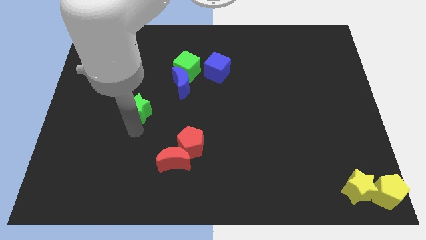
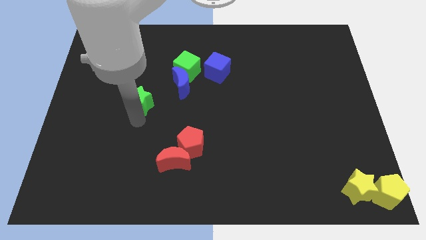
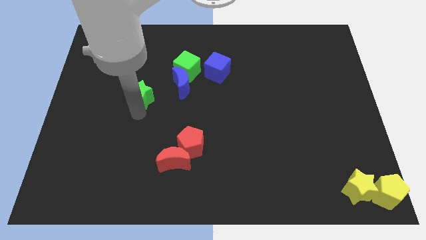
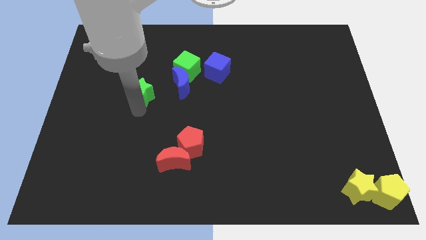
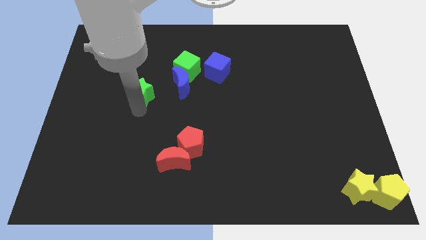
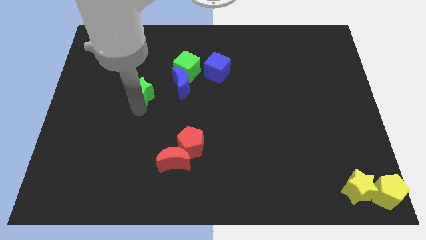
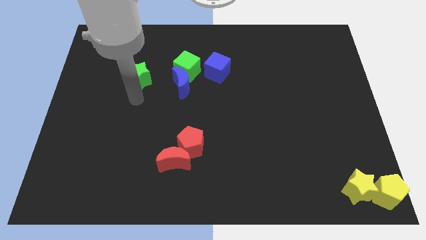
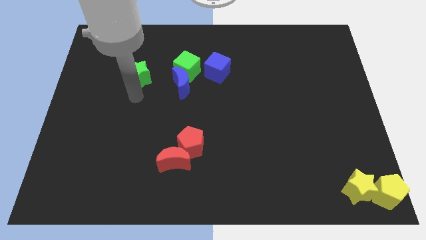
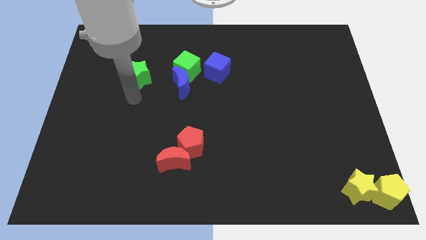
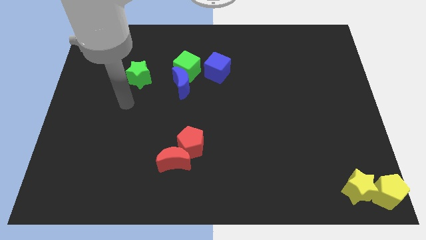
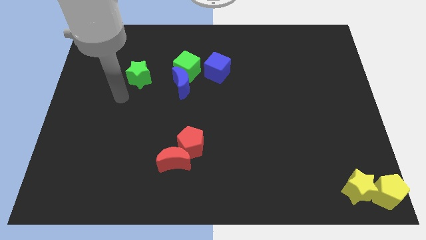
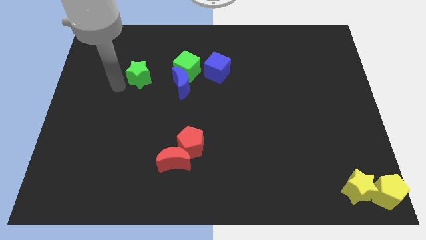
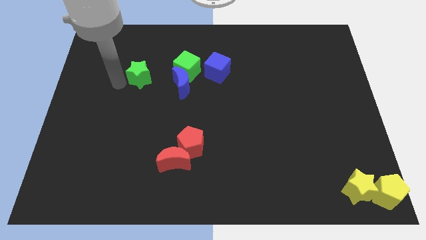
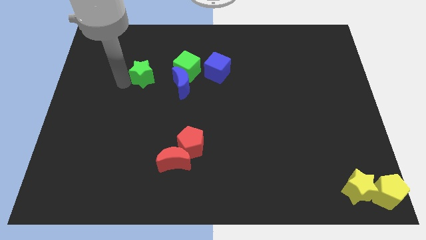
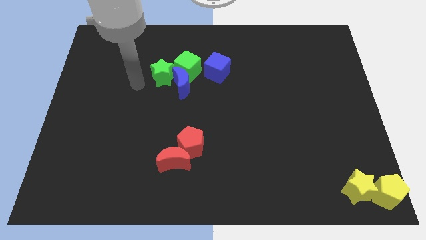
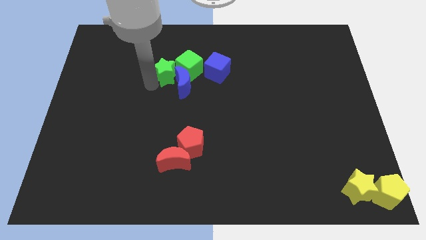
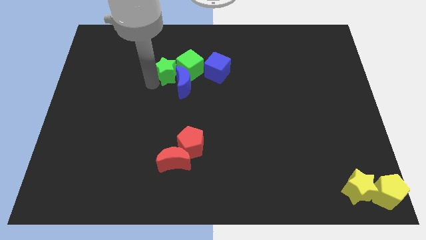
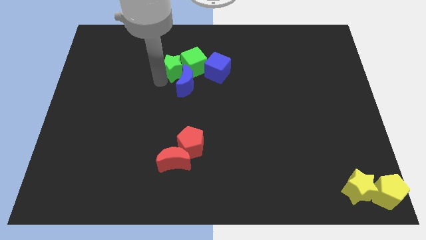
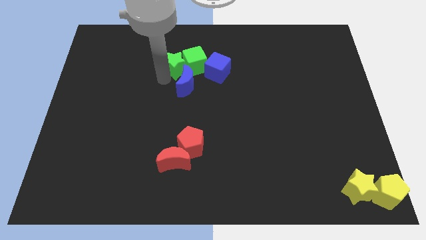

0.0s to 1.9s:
push the green star into the green cube

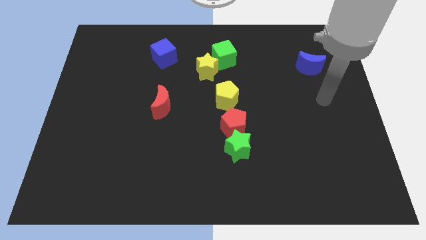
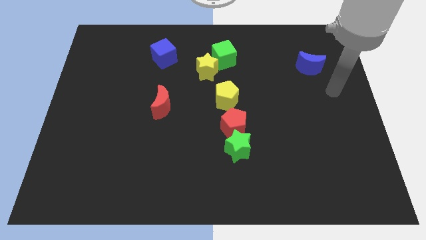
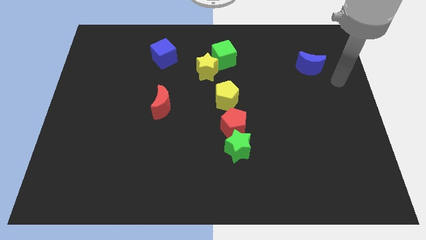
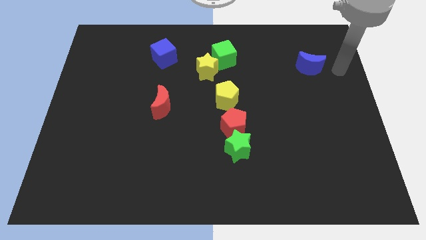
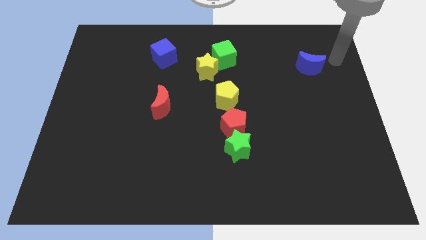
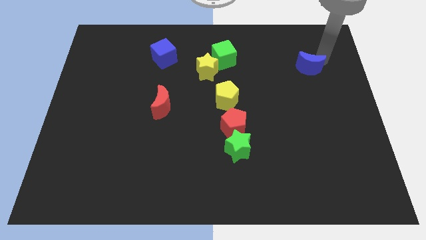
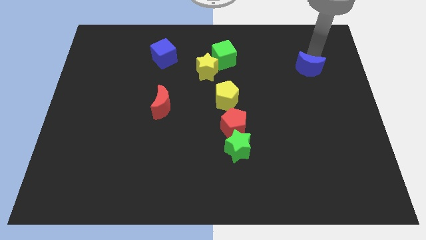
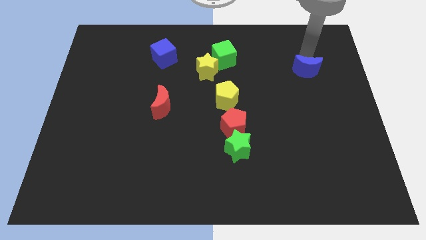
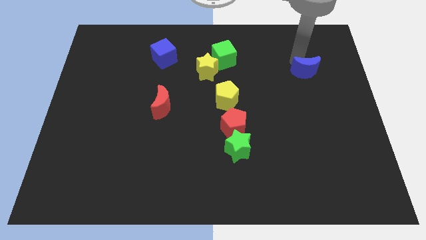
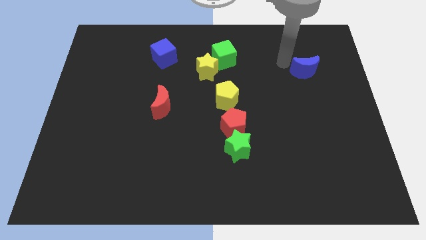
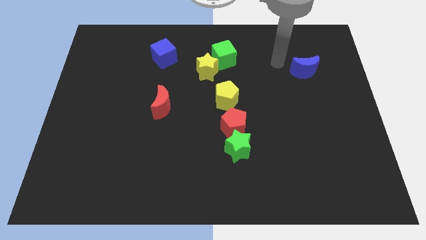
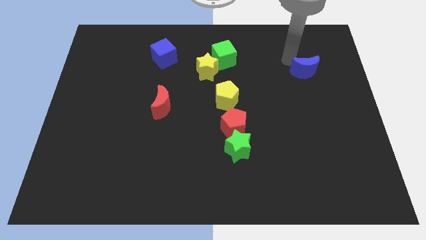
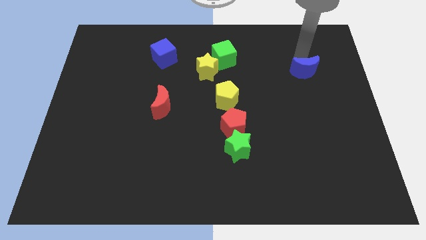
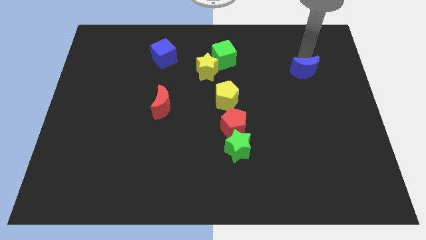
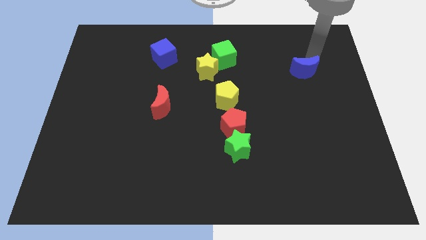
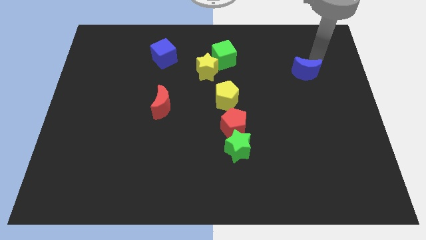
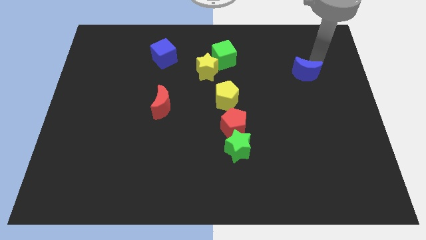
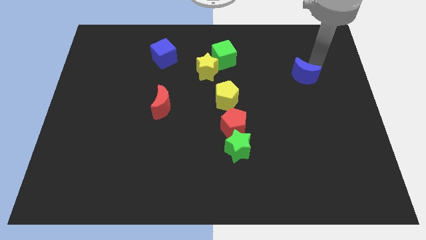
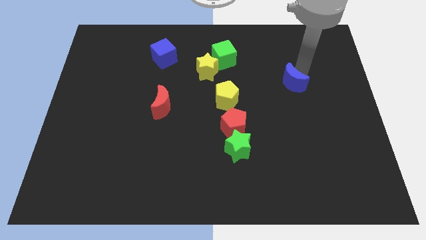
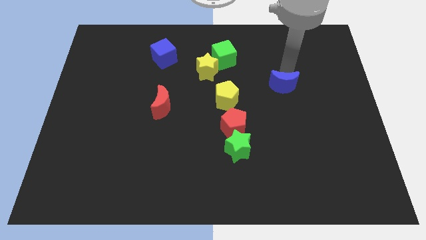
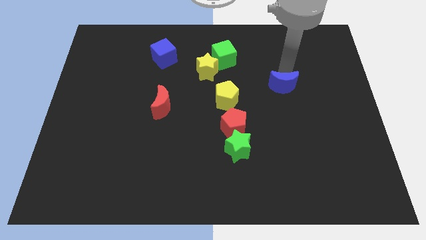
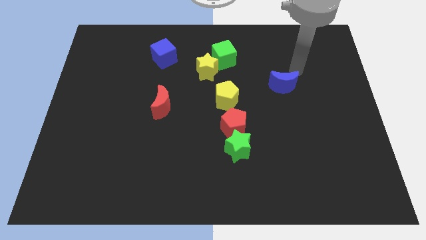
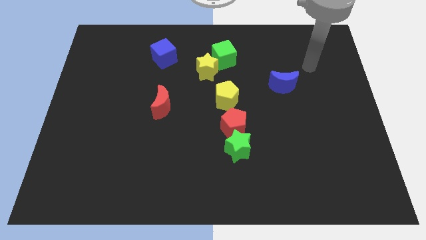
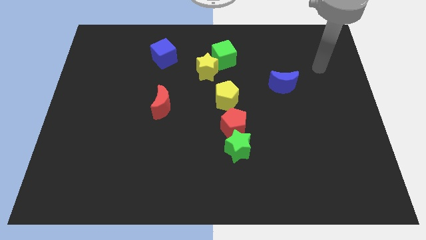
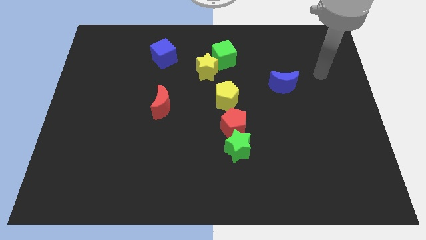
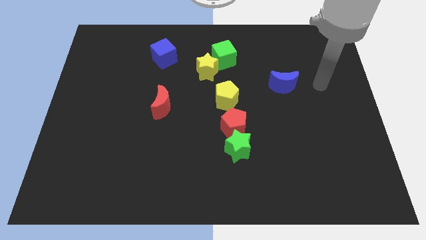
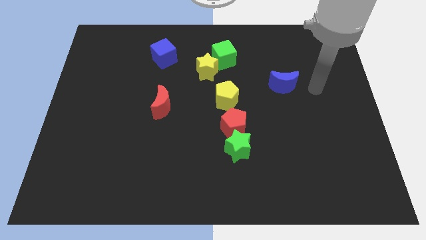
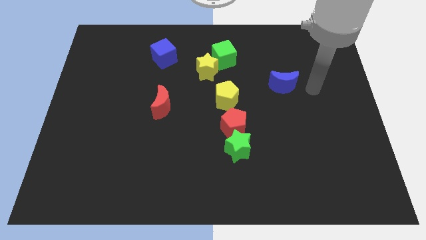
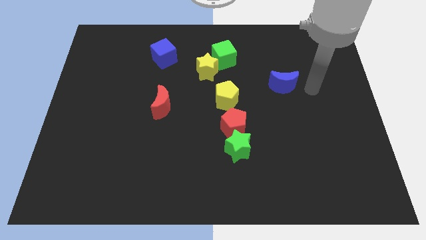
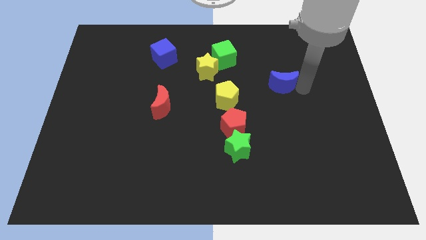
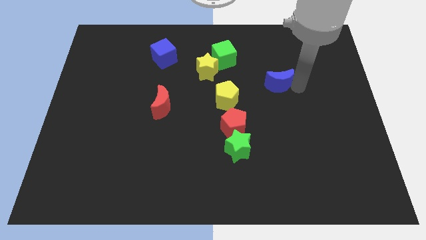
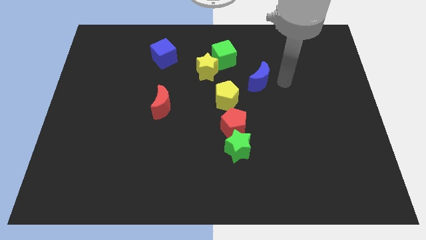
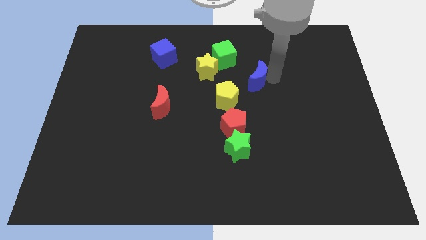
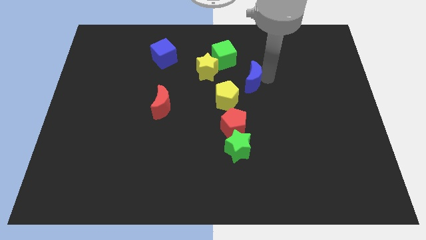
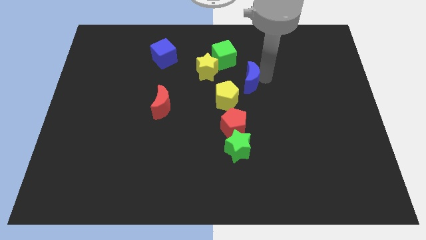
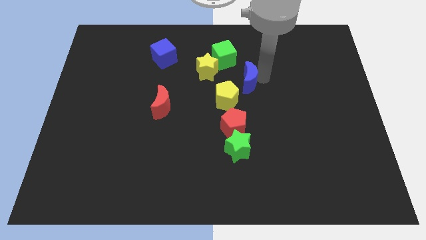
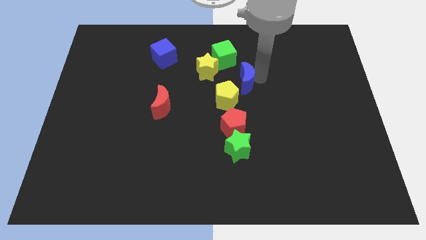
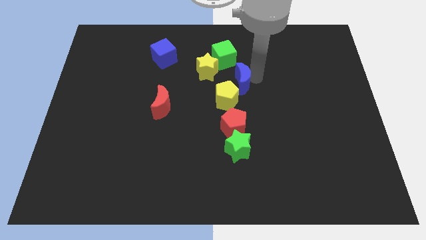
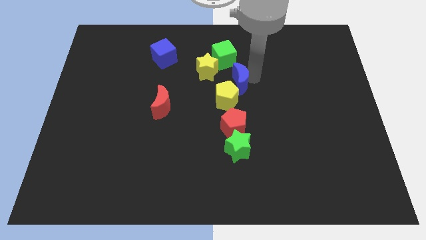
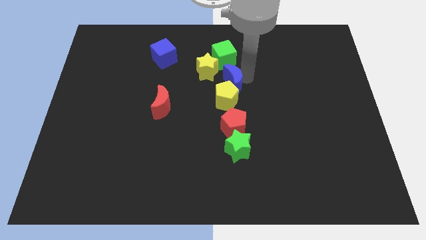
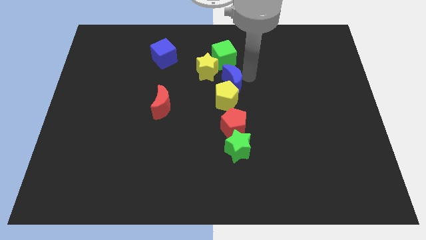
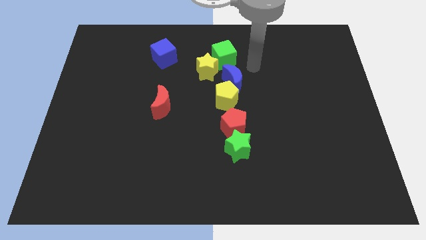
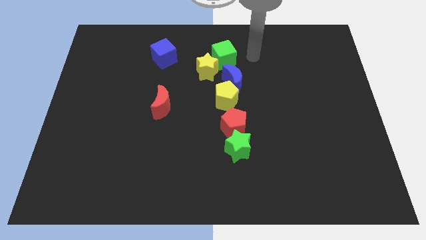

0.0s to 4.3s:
slide the blue moon above the yellow pentagon

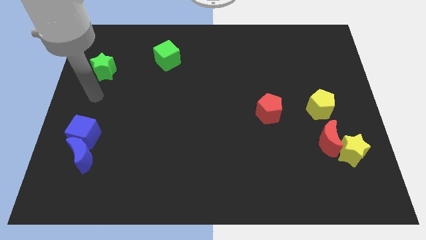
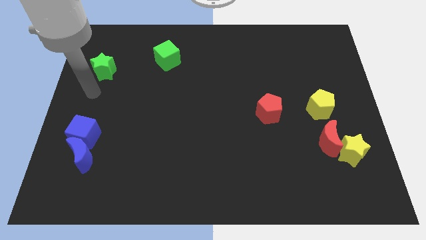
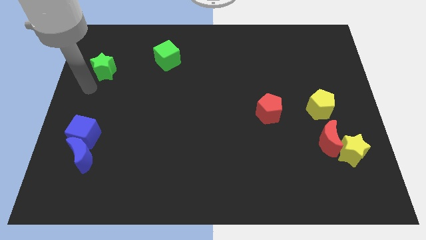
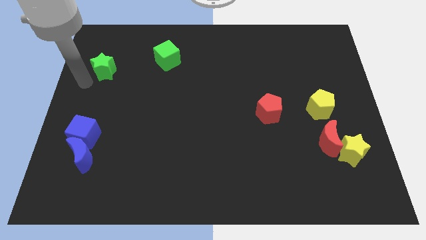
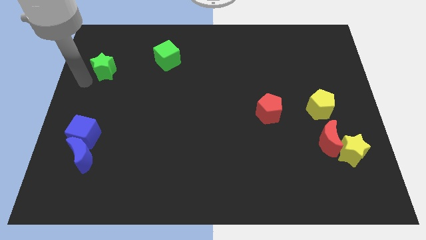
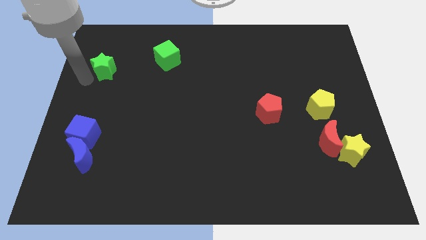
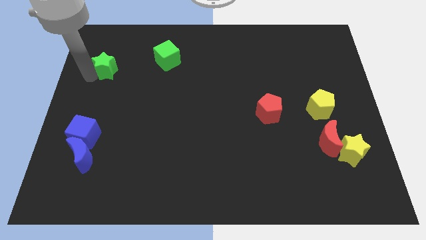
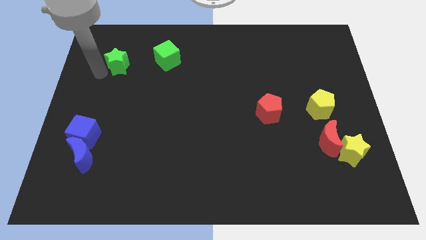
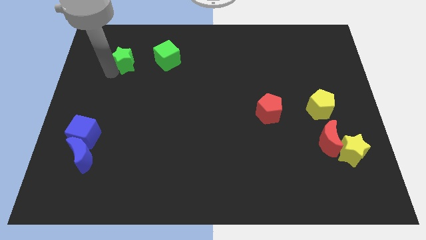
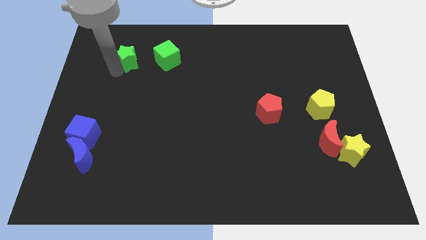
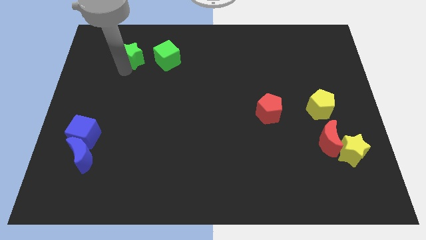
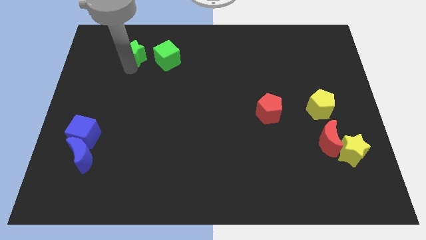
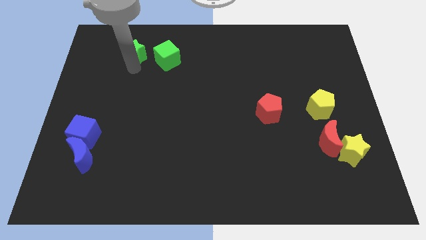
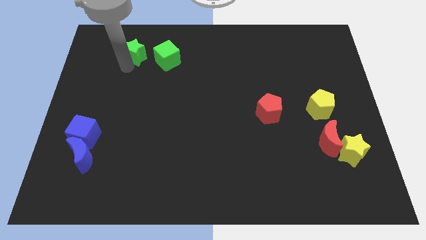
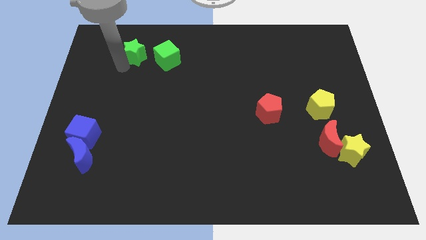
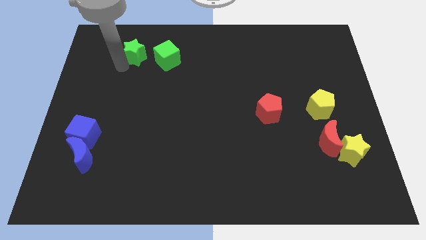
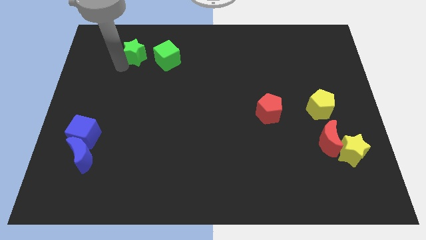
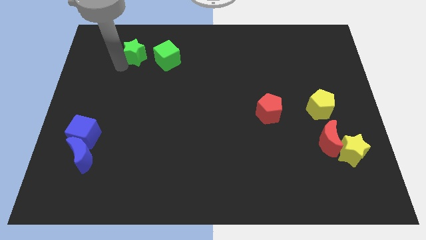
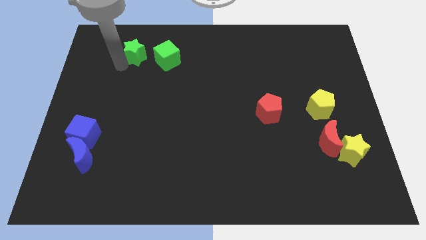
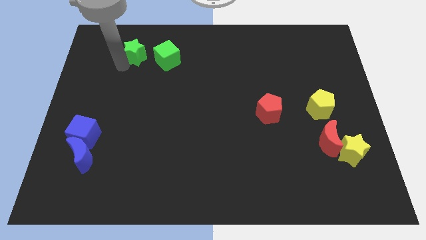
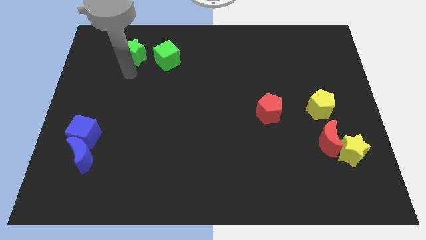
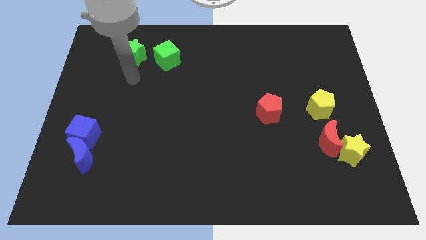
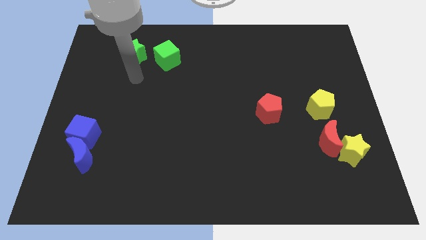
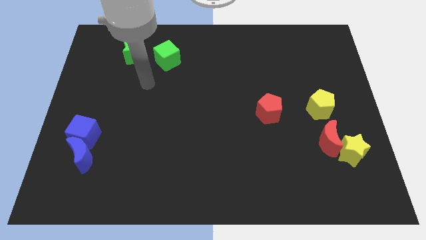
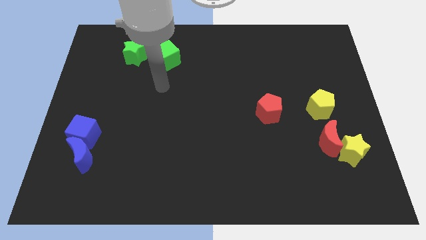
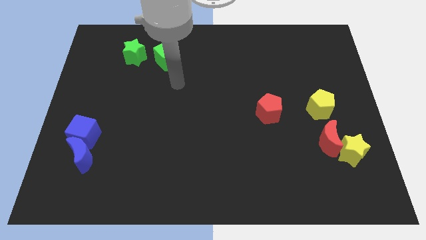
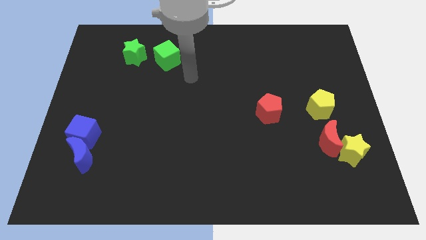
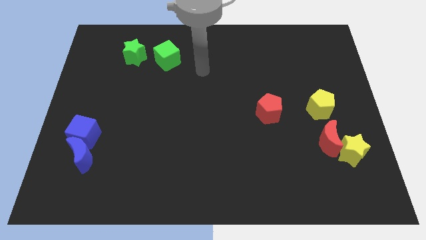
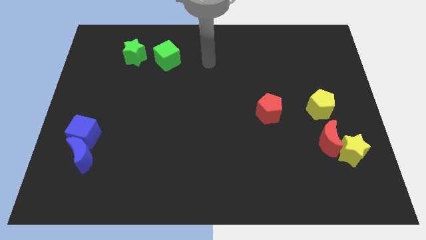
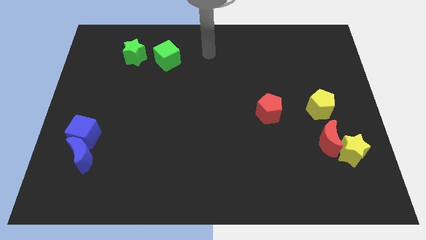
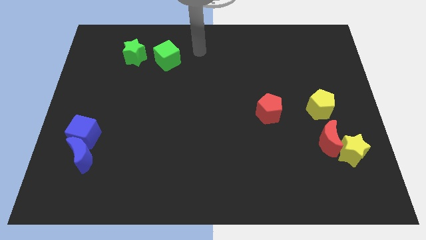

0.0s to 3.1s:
put the green star parallel to green cube
